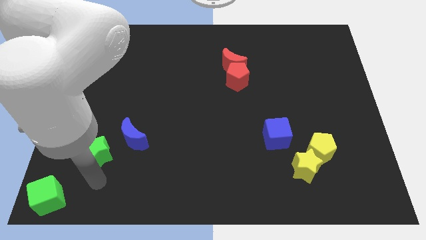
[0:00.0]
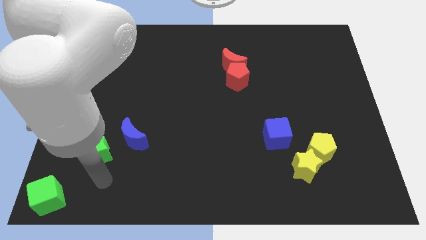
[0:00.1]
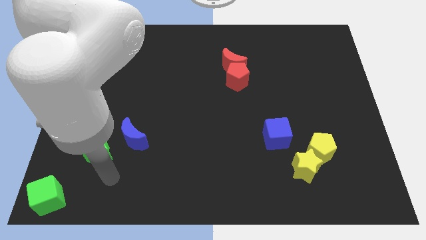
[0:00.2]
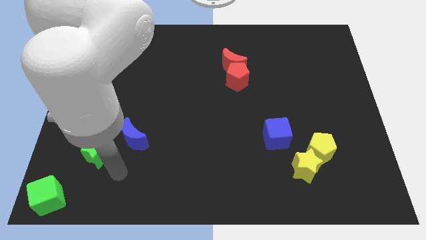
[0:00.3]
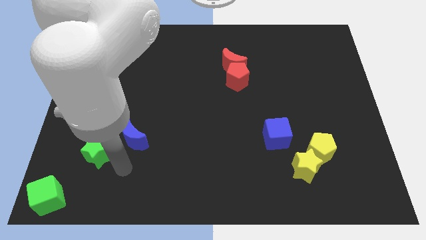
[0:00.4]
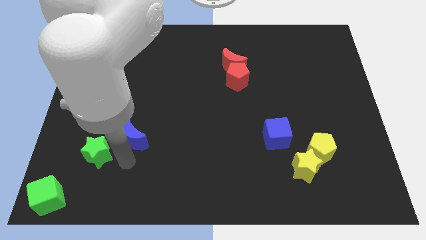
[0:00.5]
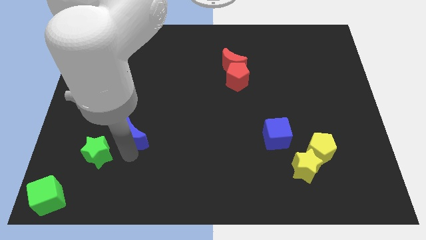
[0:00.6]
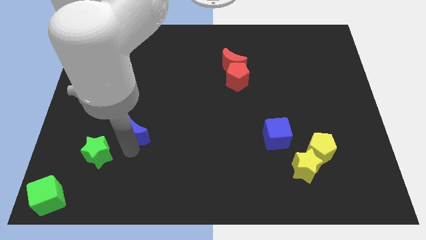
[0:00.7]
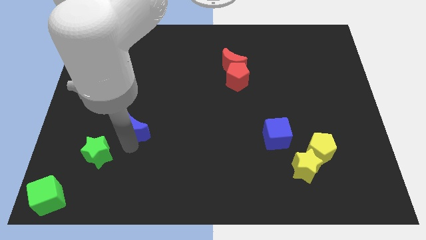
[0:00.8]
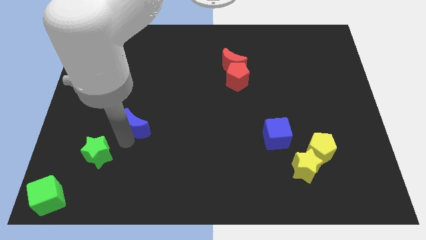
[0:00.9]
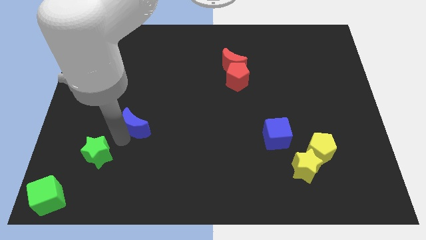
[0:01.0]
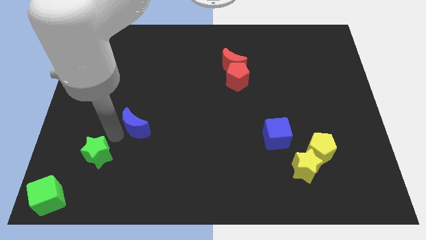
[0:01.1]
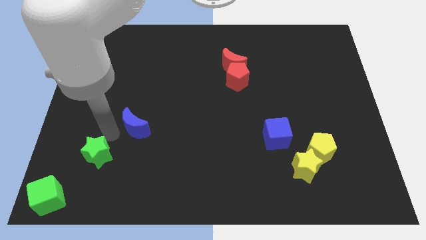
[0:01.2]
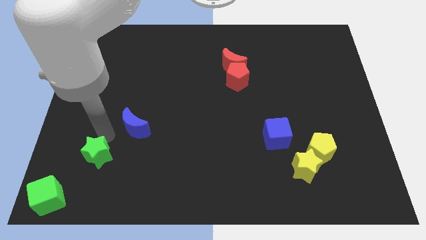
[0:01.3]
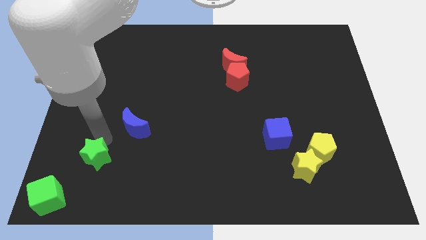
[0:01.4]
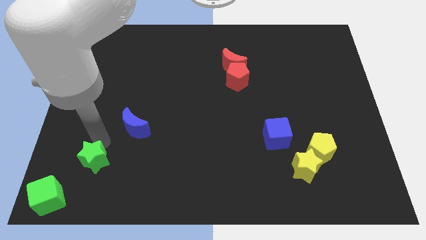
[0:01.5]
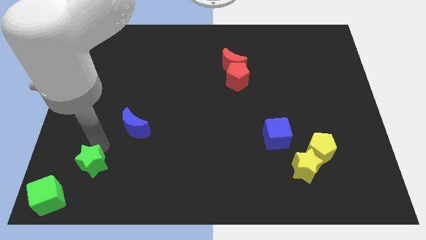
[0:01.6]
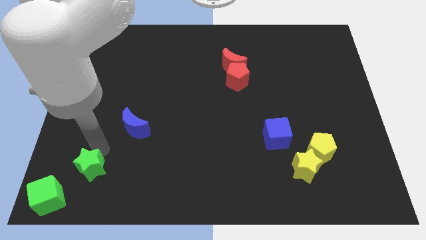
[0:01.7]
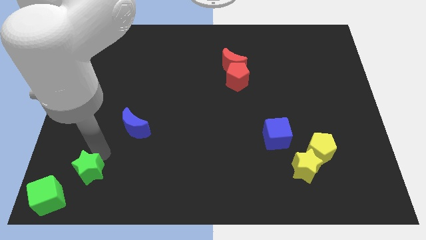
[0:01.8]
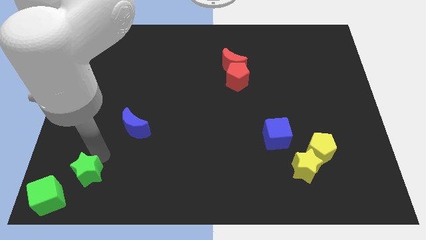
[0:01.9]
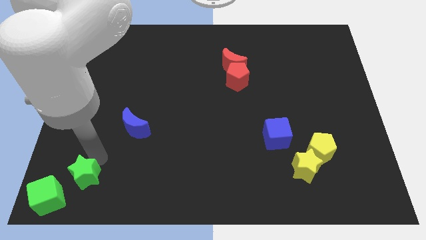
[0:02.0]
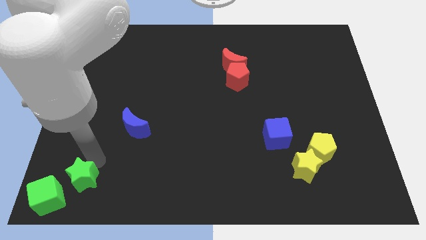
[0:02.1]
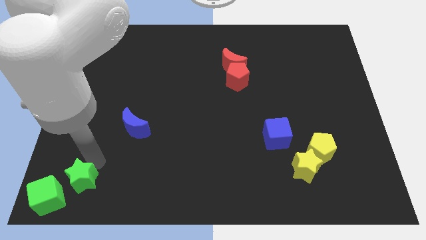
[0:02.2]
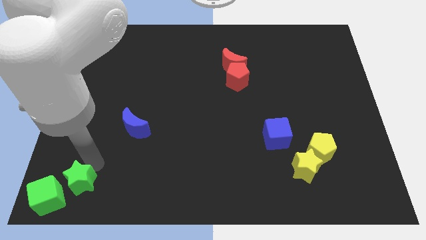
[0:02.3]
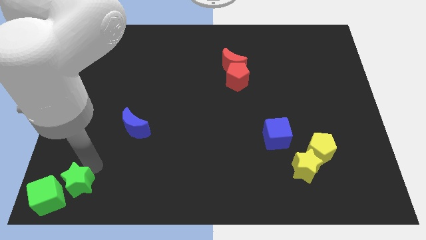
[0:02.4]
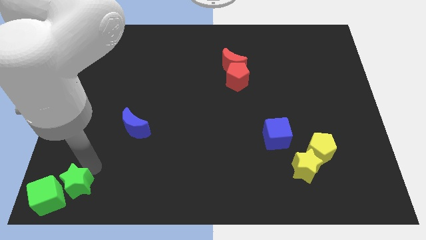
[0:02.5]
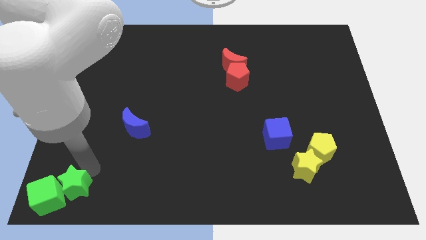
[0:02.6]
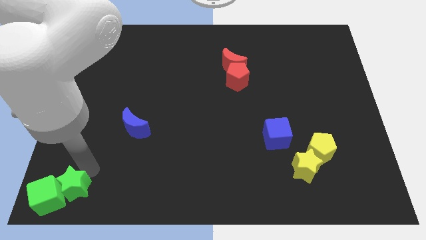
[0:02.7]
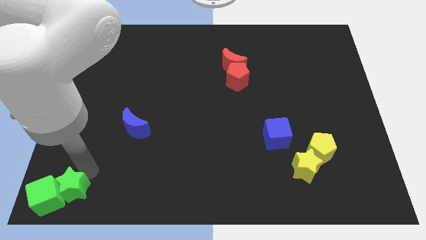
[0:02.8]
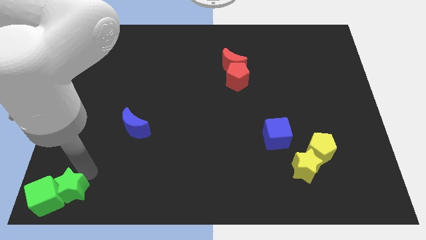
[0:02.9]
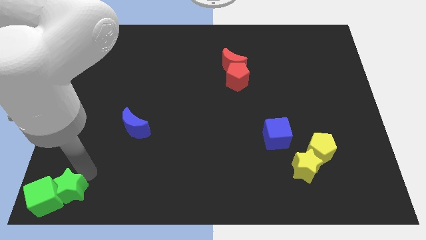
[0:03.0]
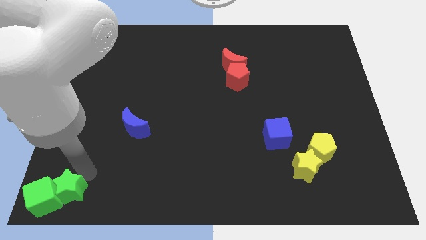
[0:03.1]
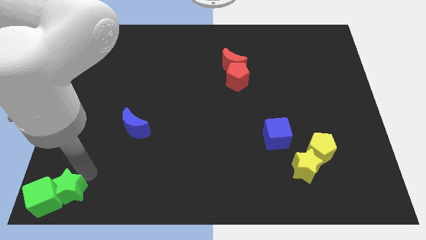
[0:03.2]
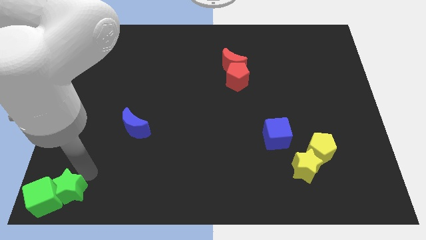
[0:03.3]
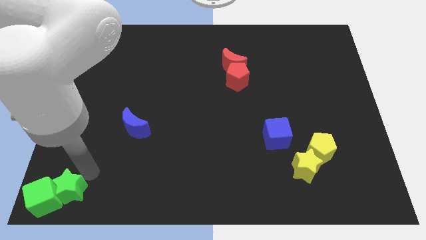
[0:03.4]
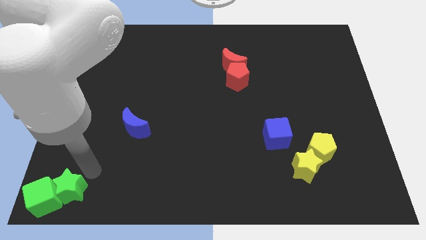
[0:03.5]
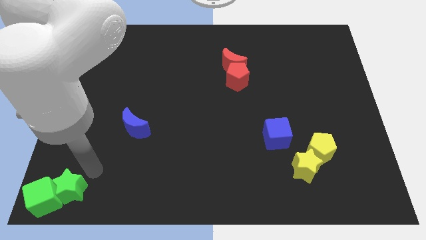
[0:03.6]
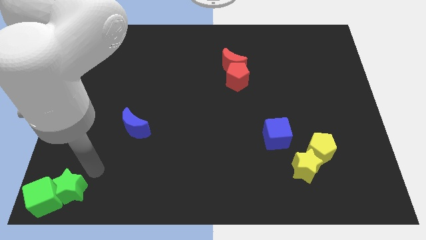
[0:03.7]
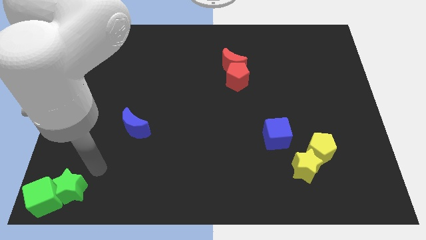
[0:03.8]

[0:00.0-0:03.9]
put the green star into the green cube

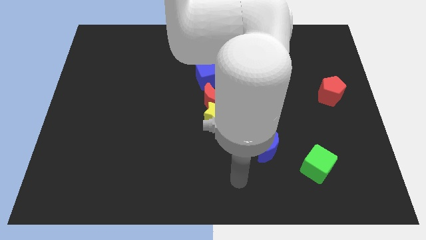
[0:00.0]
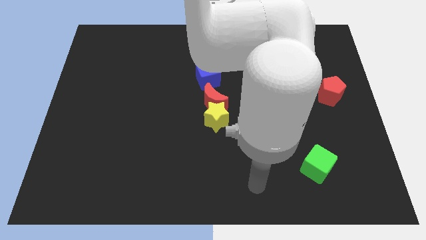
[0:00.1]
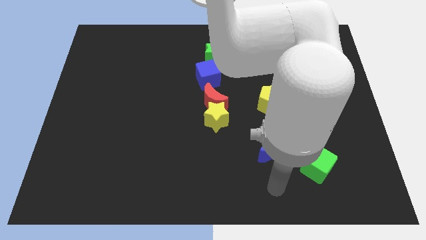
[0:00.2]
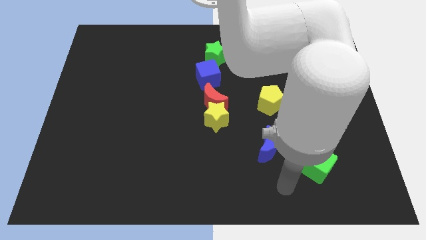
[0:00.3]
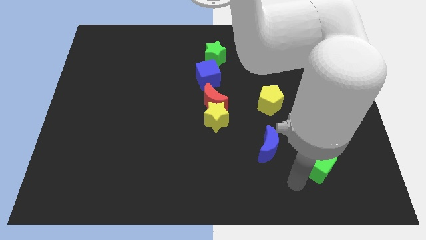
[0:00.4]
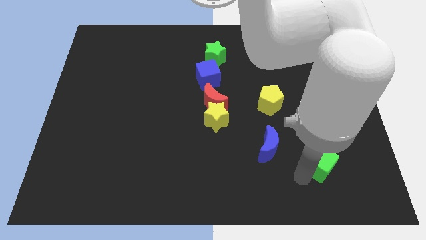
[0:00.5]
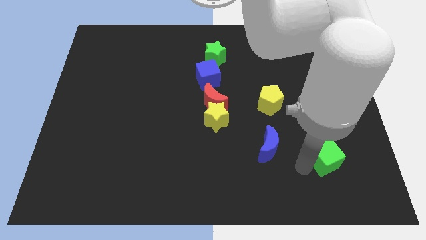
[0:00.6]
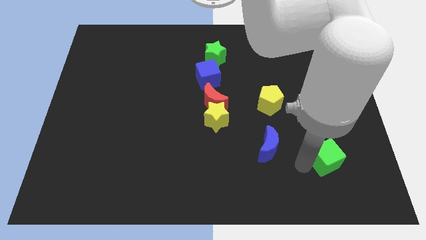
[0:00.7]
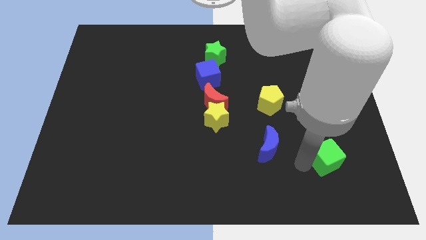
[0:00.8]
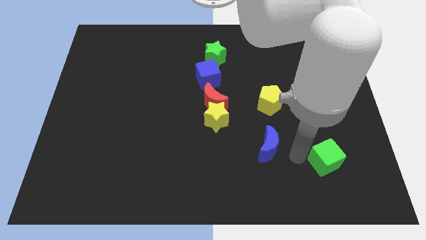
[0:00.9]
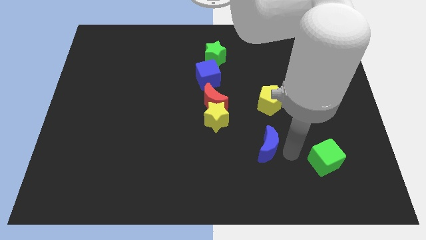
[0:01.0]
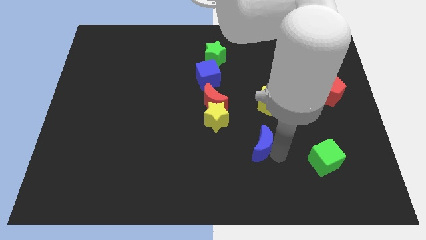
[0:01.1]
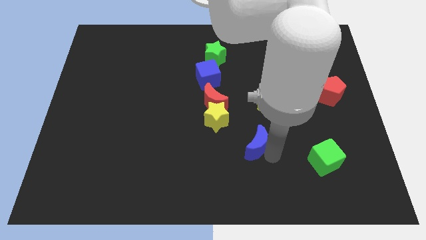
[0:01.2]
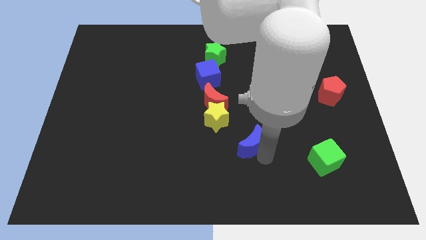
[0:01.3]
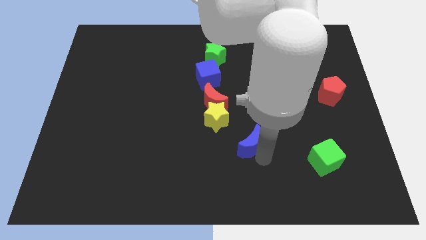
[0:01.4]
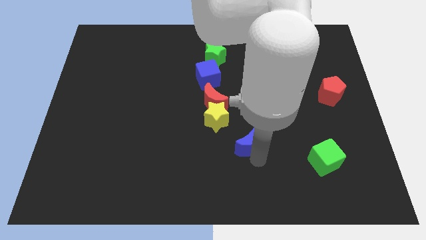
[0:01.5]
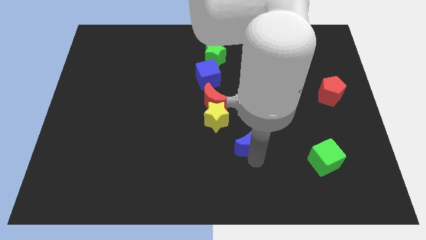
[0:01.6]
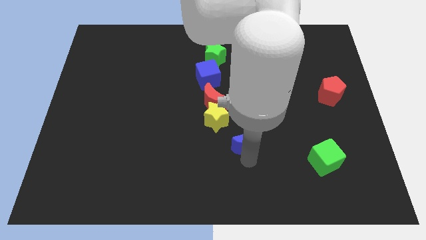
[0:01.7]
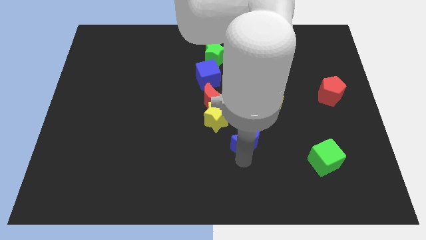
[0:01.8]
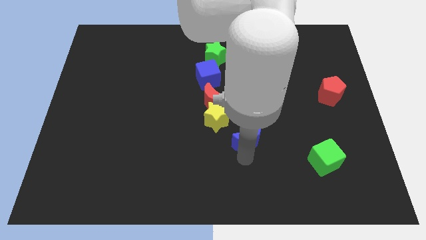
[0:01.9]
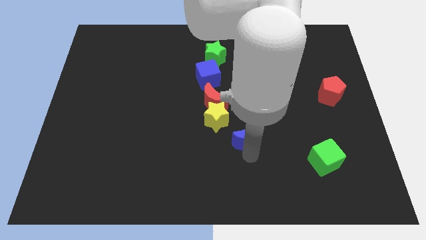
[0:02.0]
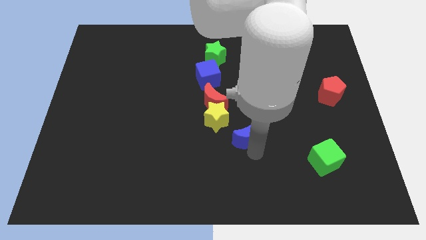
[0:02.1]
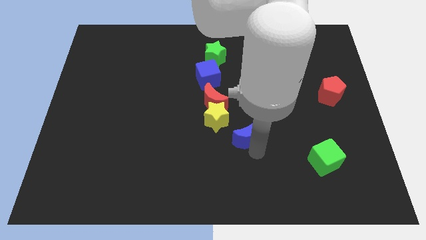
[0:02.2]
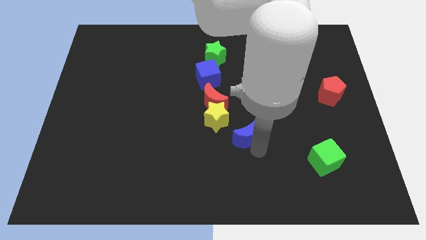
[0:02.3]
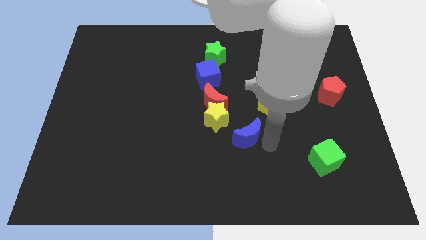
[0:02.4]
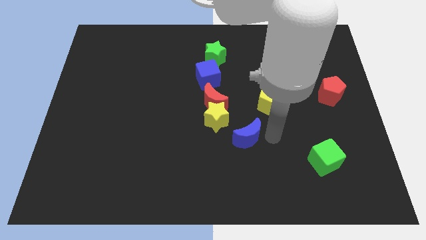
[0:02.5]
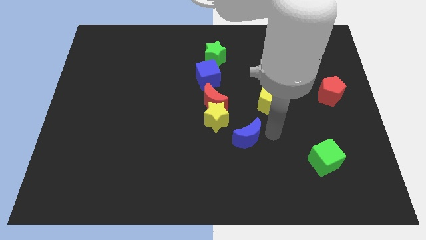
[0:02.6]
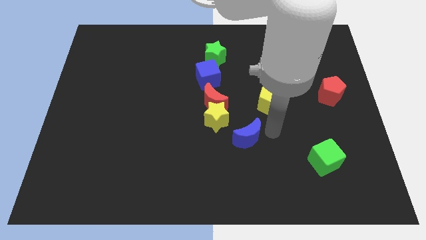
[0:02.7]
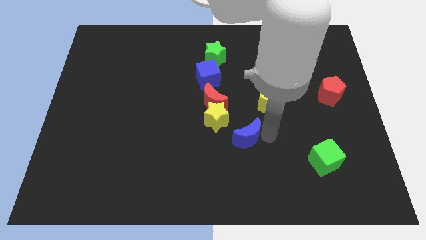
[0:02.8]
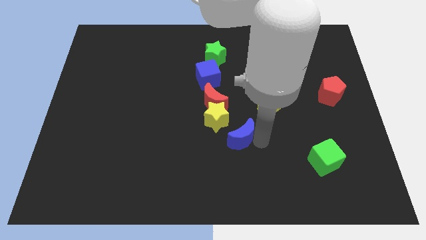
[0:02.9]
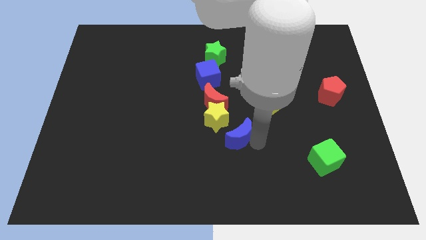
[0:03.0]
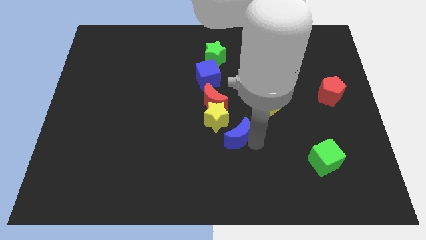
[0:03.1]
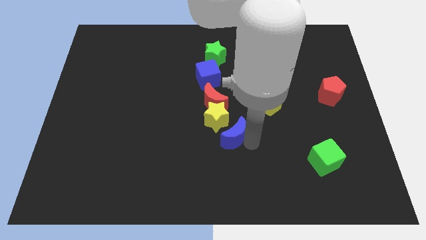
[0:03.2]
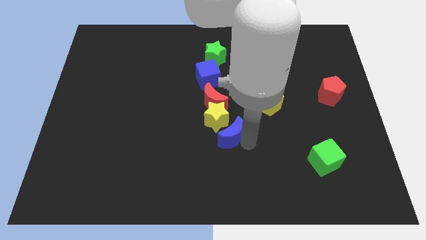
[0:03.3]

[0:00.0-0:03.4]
move the blue crescent to the bottom right side of the yellow star

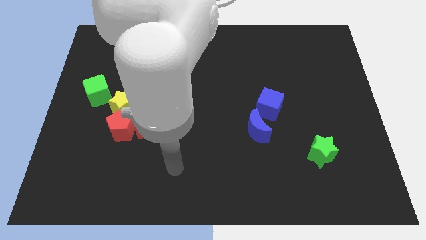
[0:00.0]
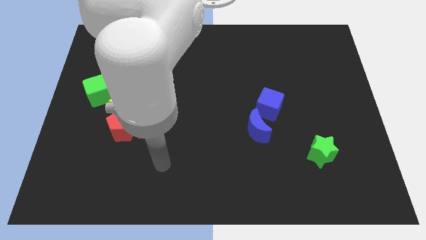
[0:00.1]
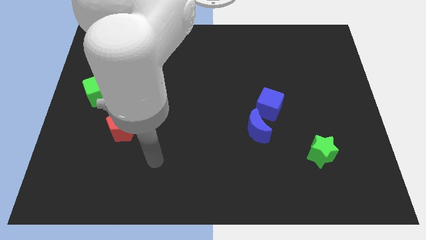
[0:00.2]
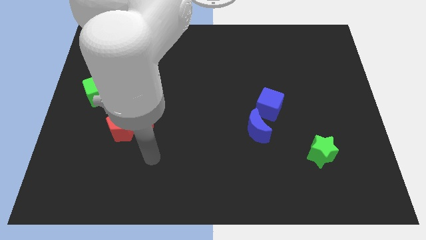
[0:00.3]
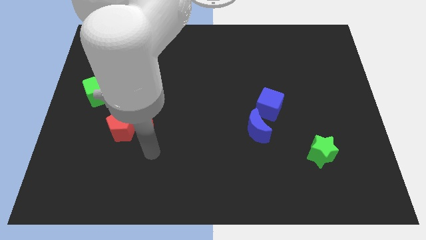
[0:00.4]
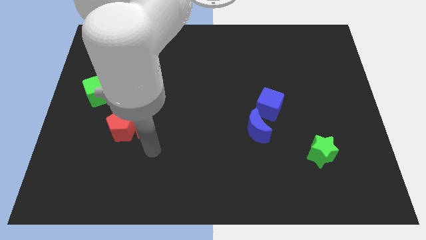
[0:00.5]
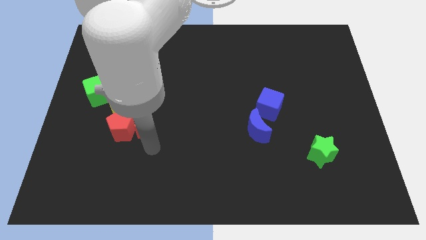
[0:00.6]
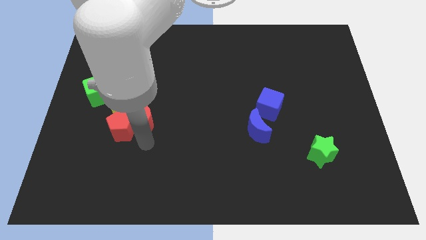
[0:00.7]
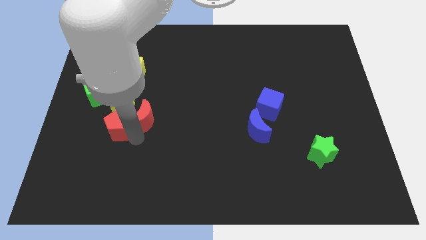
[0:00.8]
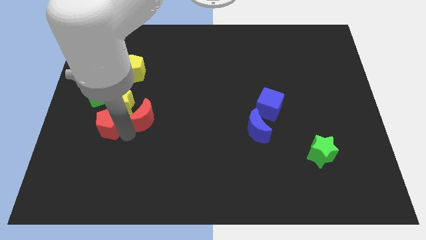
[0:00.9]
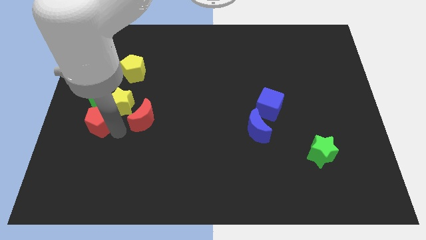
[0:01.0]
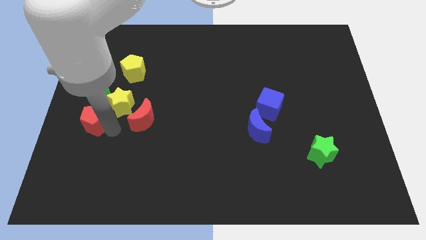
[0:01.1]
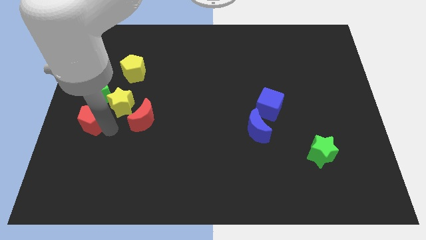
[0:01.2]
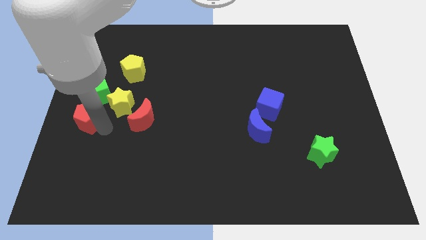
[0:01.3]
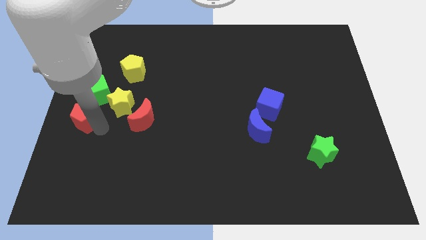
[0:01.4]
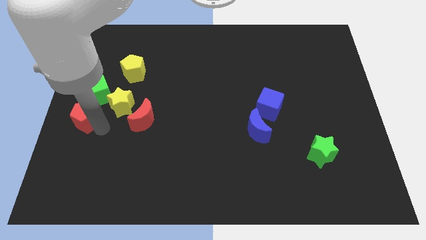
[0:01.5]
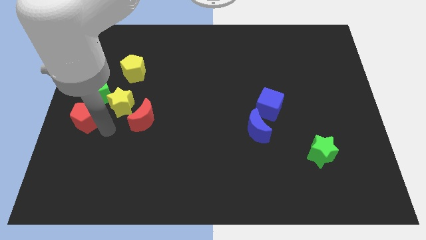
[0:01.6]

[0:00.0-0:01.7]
place the red pentagon at the bottom of green cube

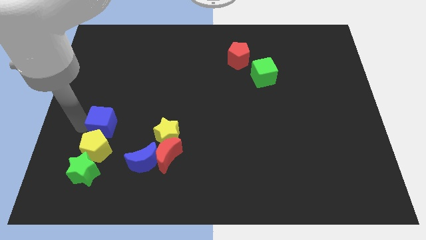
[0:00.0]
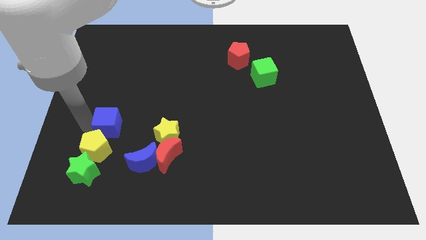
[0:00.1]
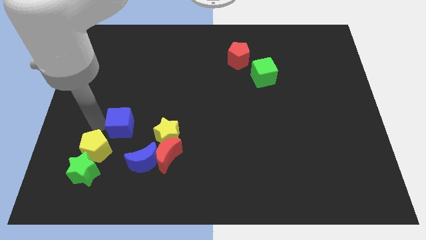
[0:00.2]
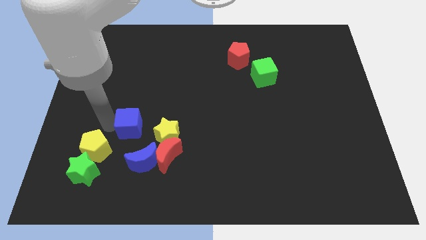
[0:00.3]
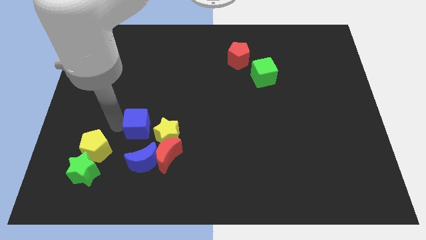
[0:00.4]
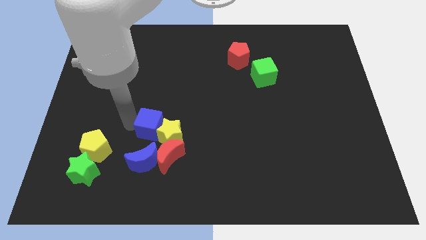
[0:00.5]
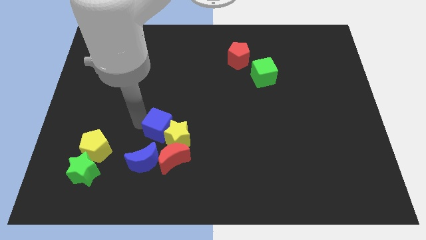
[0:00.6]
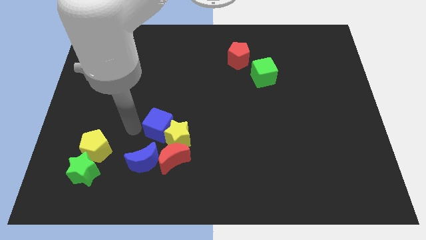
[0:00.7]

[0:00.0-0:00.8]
push blue cube into the yellow star
